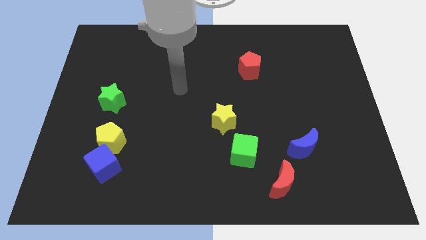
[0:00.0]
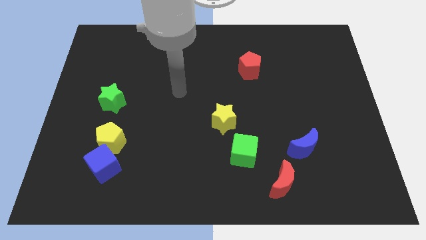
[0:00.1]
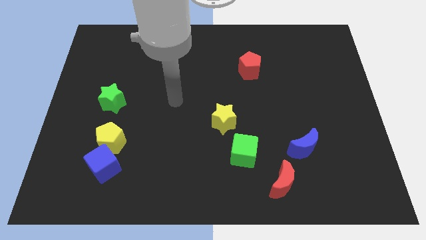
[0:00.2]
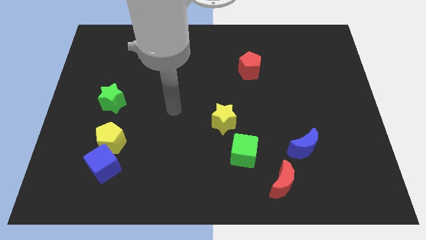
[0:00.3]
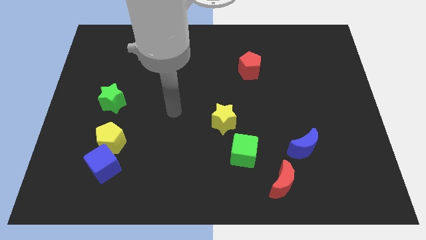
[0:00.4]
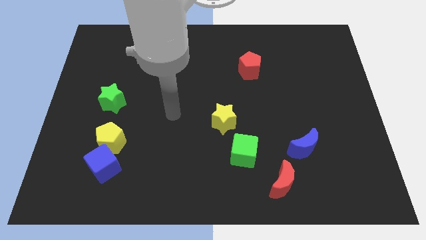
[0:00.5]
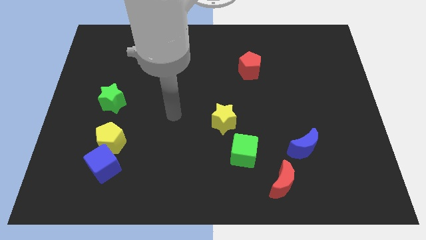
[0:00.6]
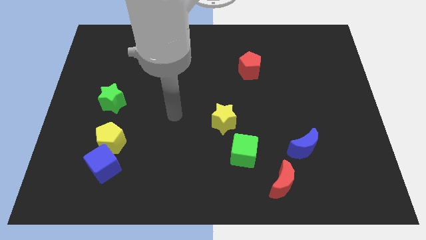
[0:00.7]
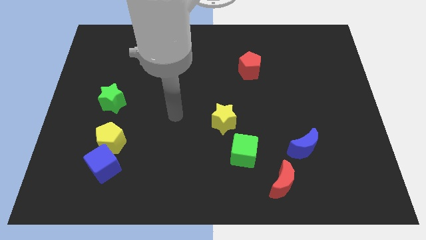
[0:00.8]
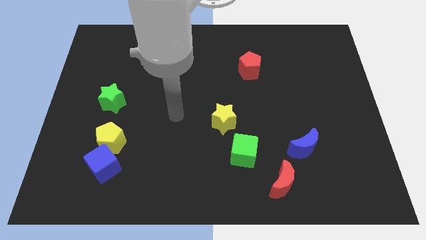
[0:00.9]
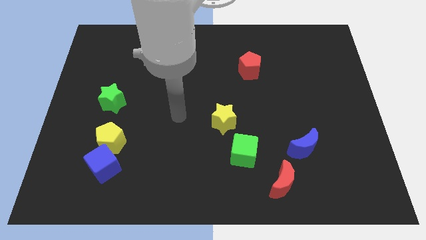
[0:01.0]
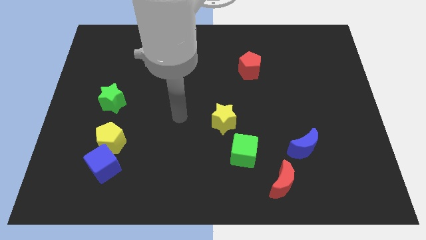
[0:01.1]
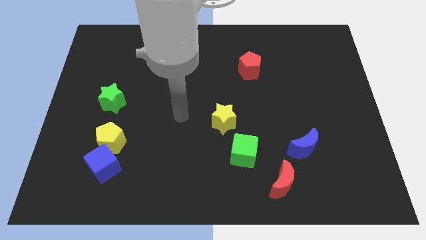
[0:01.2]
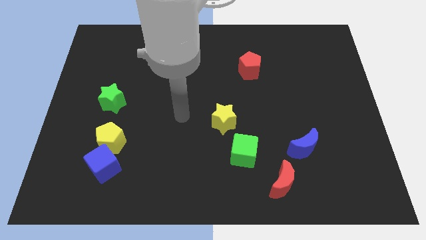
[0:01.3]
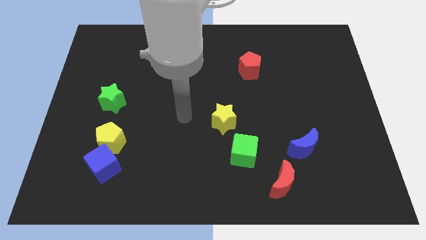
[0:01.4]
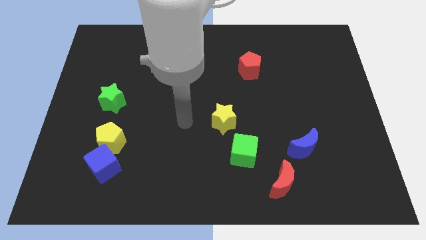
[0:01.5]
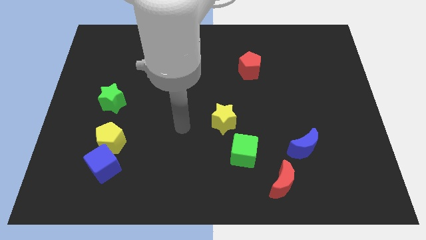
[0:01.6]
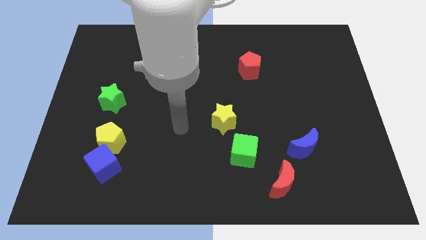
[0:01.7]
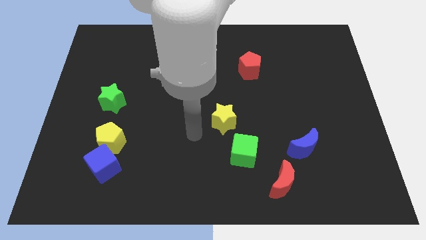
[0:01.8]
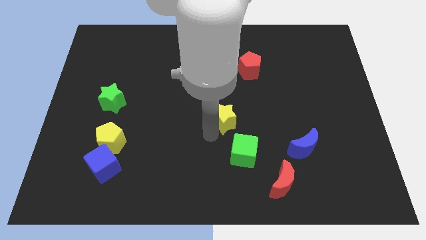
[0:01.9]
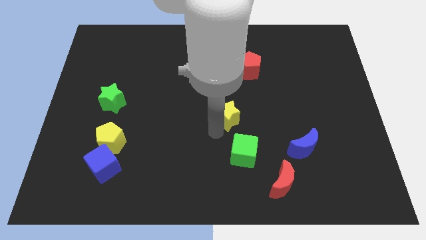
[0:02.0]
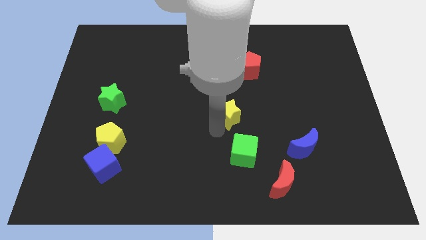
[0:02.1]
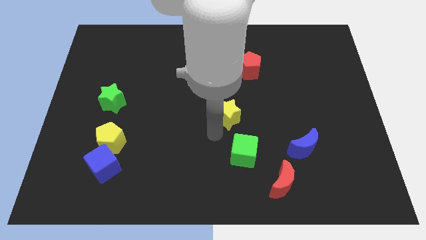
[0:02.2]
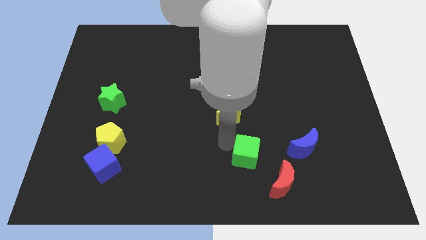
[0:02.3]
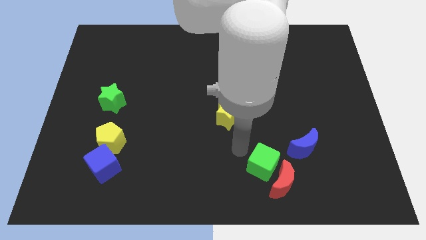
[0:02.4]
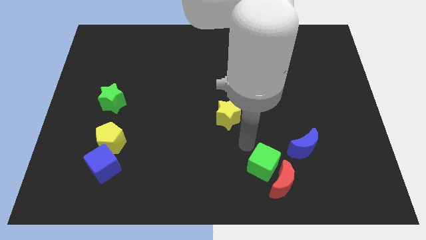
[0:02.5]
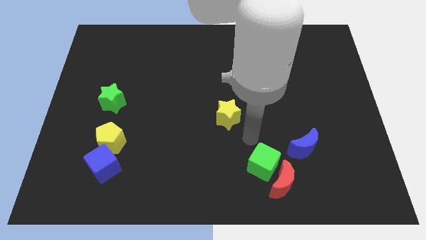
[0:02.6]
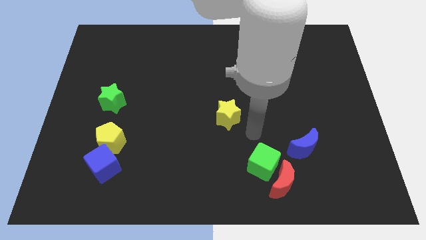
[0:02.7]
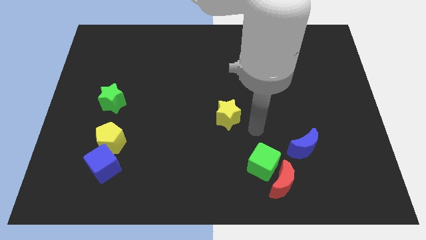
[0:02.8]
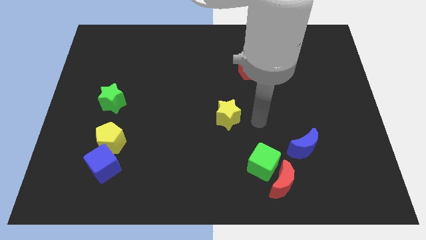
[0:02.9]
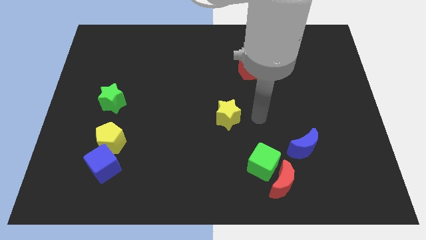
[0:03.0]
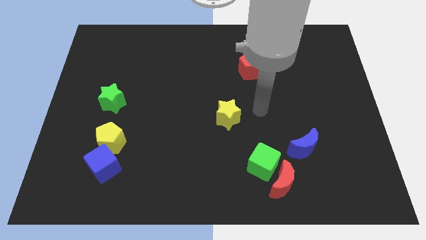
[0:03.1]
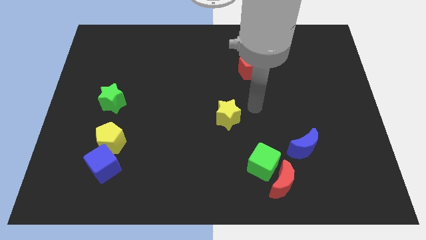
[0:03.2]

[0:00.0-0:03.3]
push the yellow star and the green cube slightly to the right

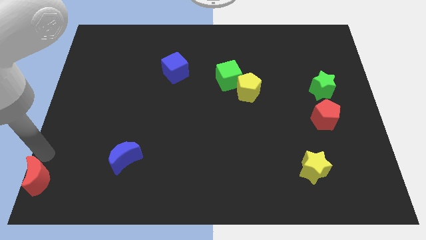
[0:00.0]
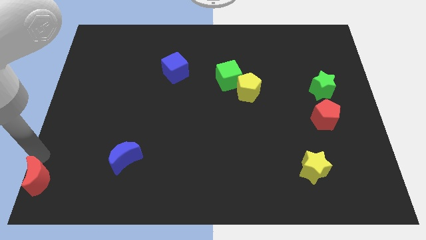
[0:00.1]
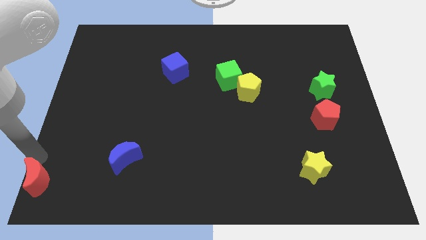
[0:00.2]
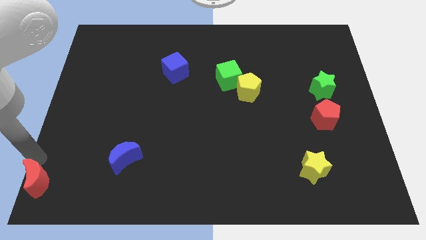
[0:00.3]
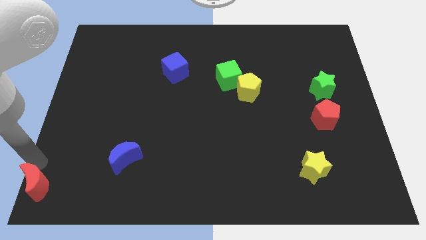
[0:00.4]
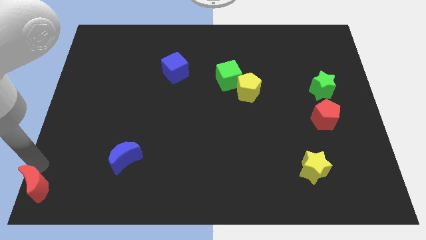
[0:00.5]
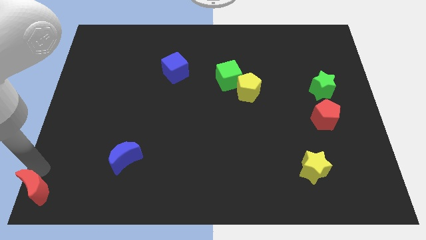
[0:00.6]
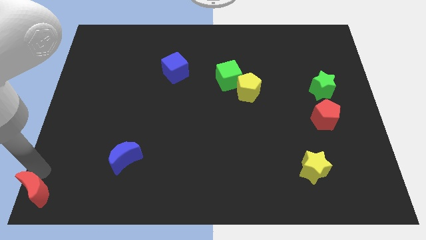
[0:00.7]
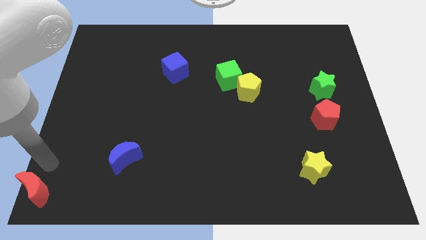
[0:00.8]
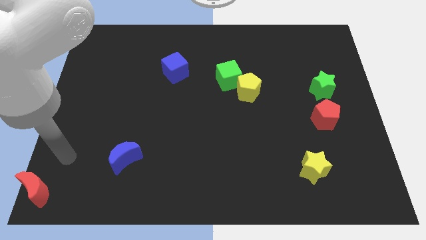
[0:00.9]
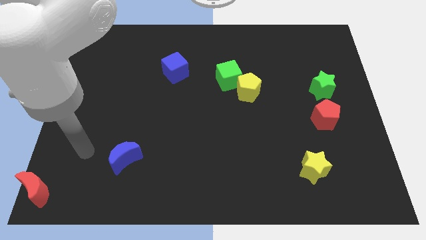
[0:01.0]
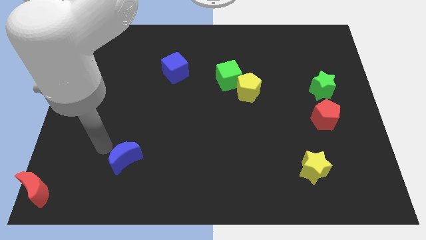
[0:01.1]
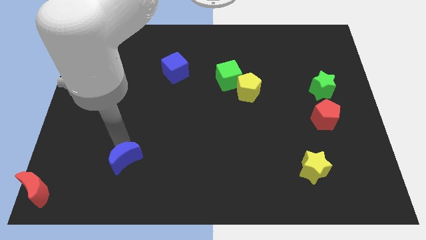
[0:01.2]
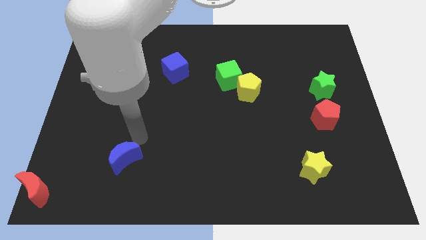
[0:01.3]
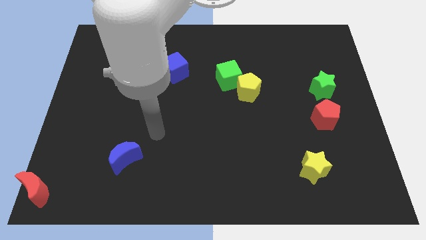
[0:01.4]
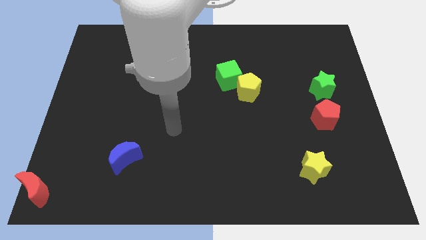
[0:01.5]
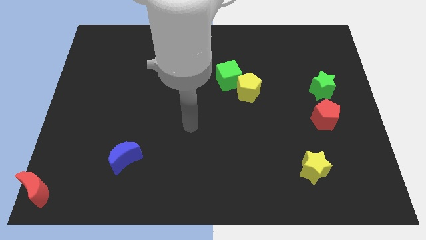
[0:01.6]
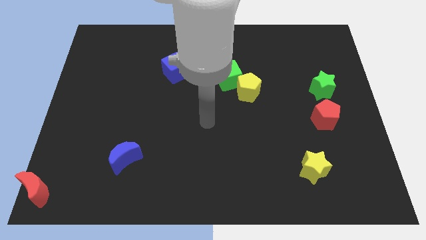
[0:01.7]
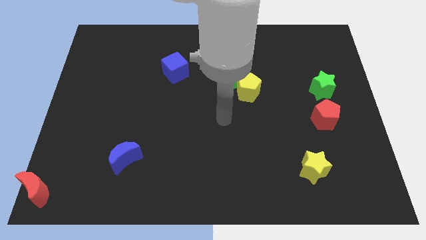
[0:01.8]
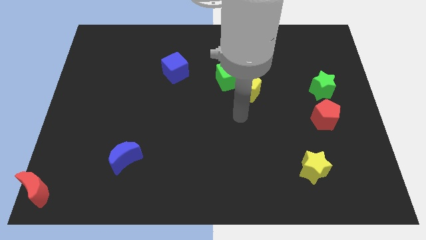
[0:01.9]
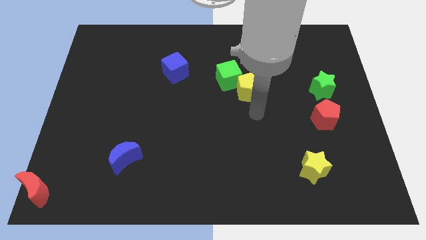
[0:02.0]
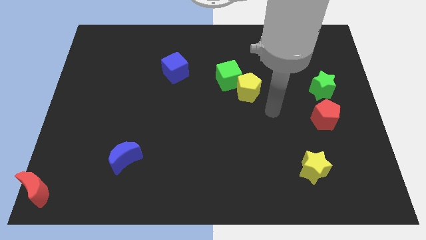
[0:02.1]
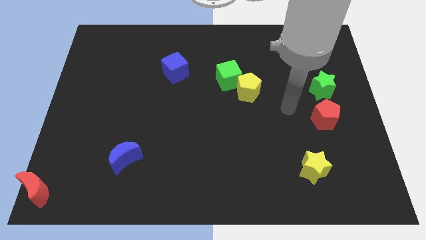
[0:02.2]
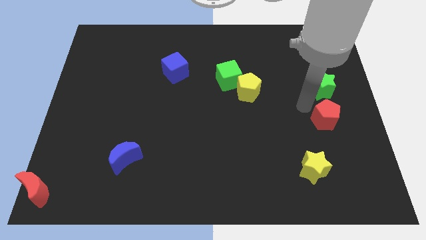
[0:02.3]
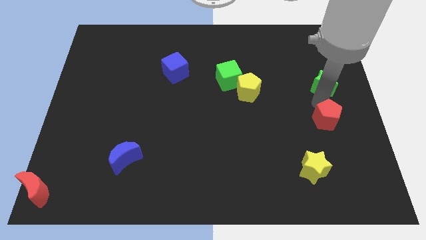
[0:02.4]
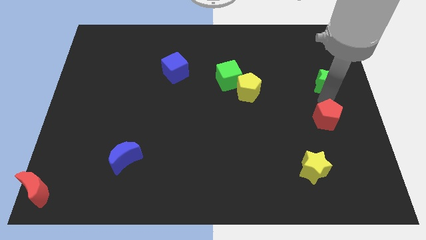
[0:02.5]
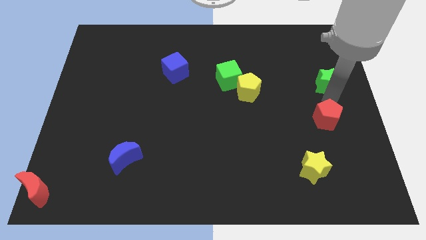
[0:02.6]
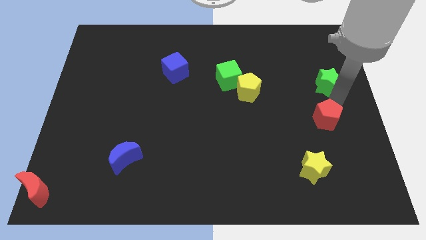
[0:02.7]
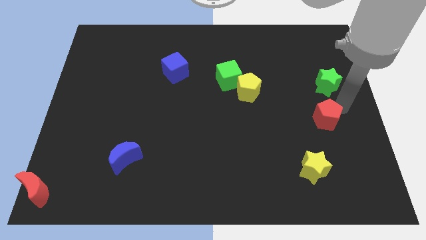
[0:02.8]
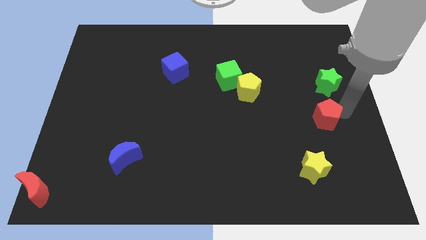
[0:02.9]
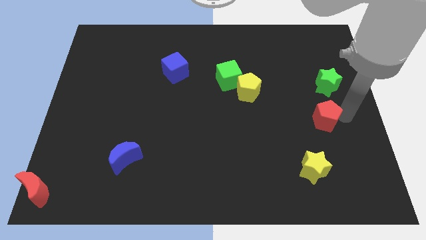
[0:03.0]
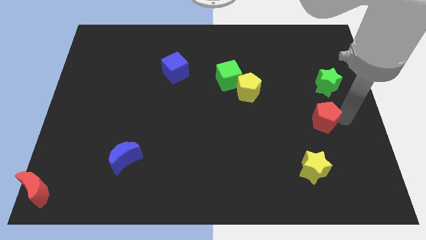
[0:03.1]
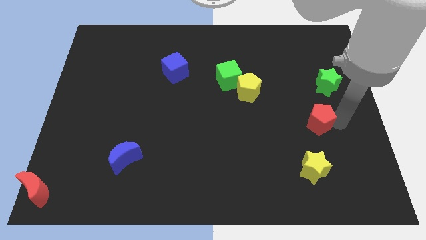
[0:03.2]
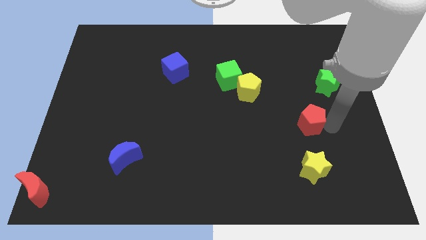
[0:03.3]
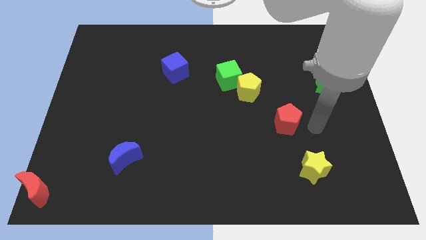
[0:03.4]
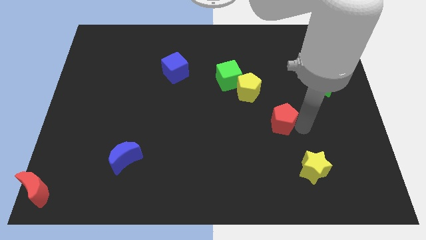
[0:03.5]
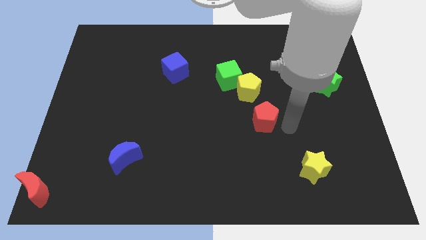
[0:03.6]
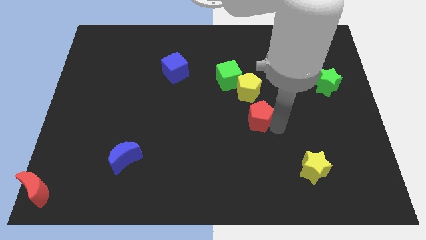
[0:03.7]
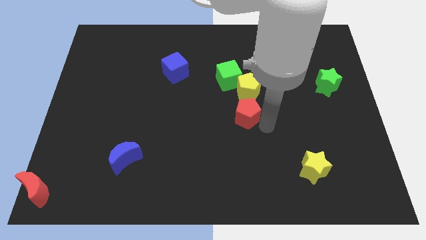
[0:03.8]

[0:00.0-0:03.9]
place the red pentagon at the bottom of the yellow pentagon

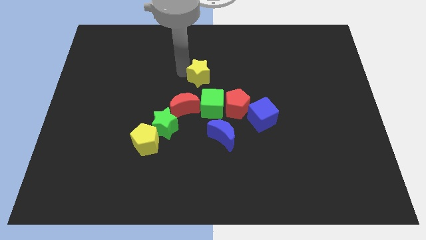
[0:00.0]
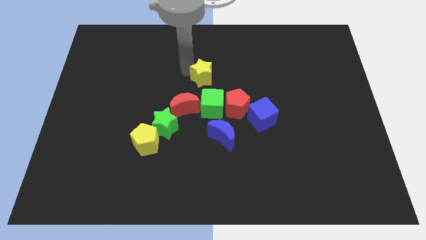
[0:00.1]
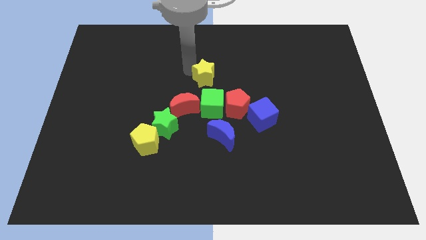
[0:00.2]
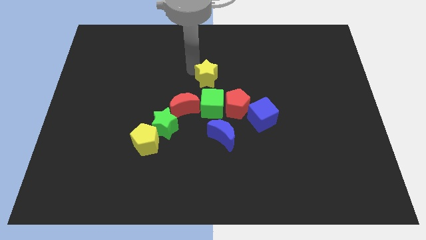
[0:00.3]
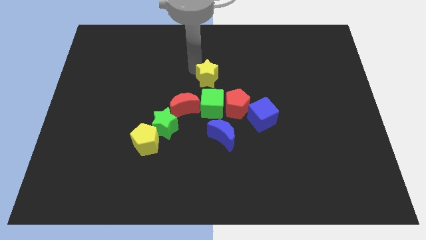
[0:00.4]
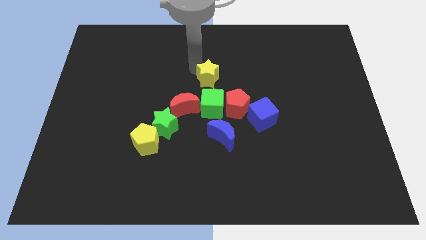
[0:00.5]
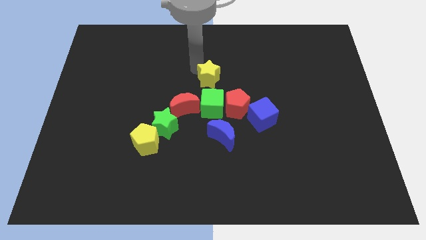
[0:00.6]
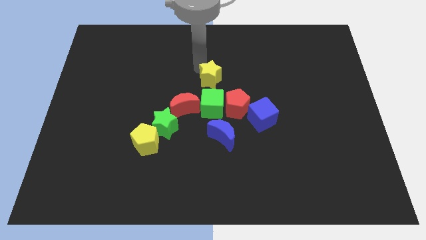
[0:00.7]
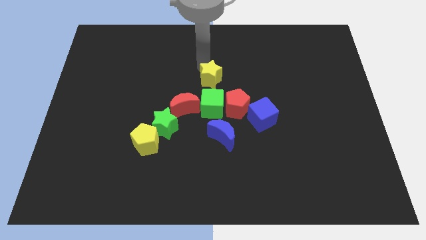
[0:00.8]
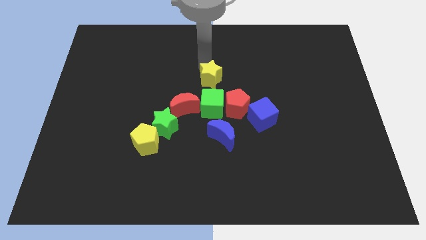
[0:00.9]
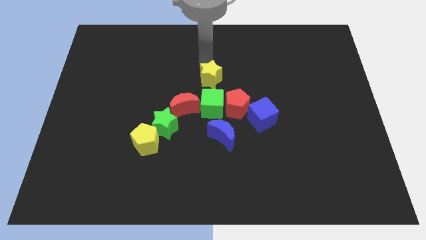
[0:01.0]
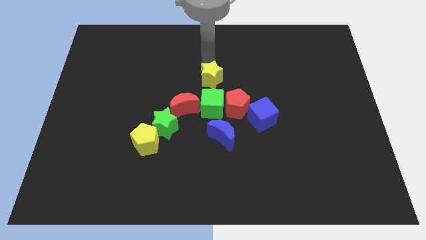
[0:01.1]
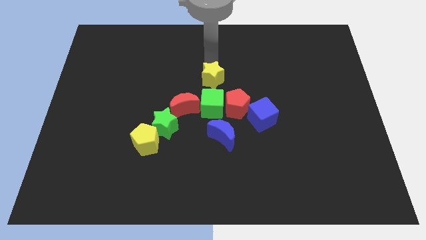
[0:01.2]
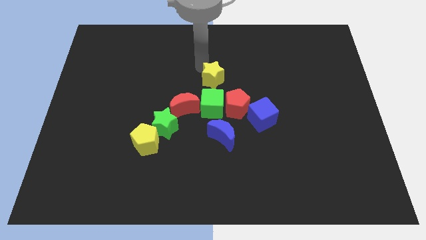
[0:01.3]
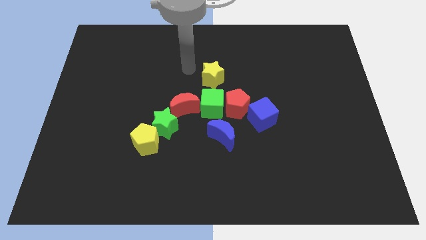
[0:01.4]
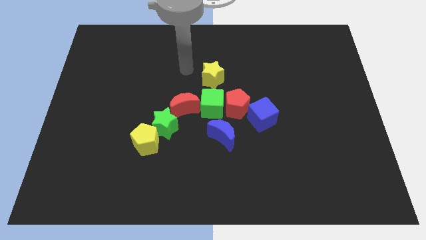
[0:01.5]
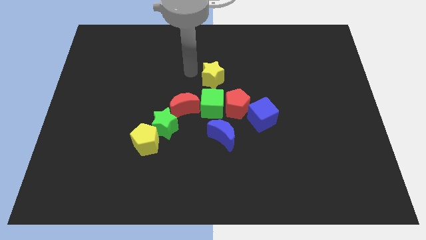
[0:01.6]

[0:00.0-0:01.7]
push the yellow star to the top of the green cube
